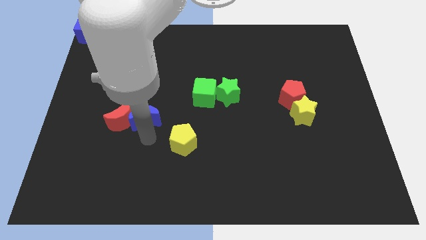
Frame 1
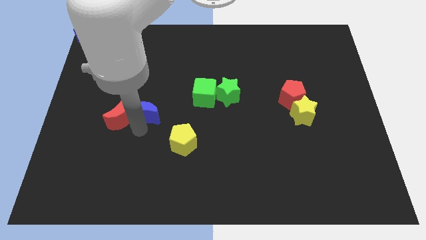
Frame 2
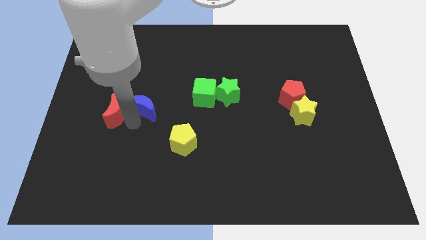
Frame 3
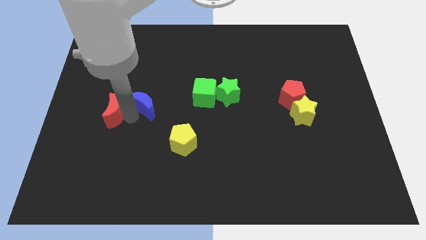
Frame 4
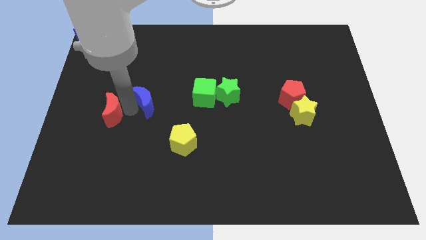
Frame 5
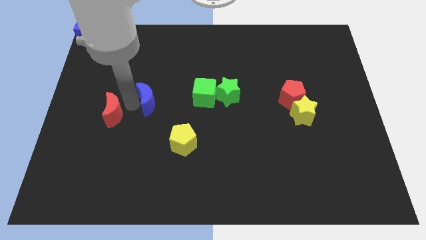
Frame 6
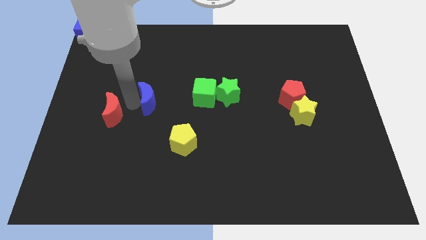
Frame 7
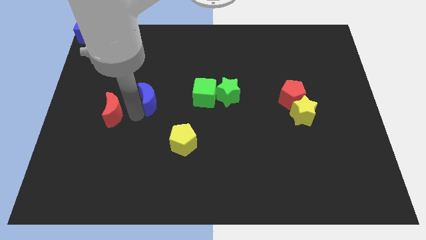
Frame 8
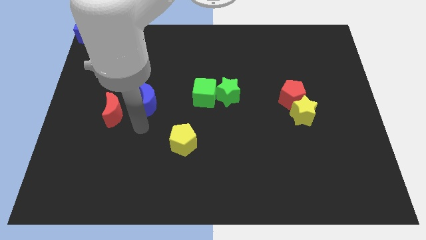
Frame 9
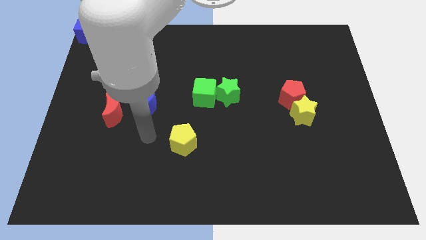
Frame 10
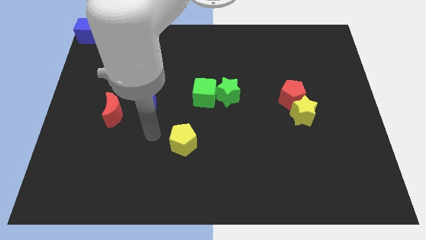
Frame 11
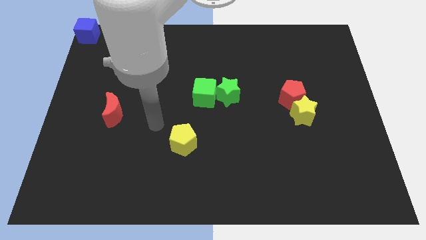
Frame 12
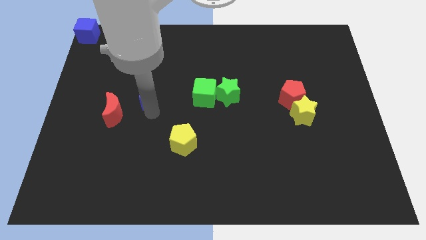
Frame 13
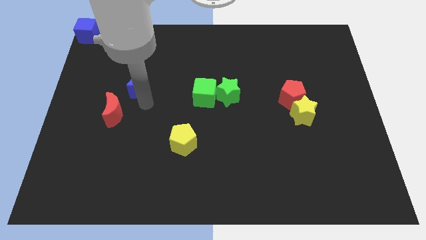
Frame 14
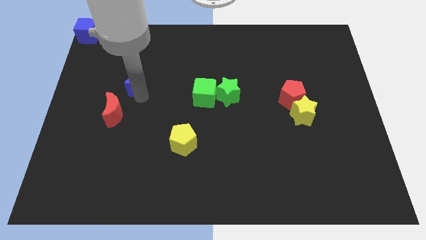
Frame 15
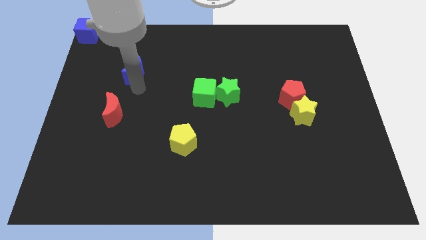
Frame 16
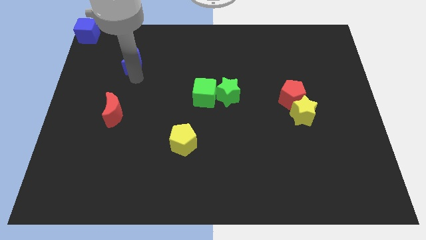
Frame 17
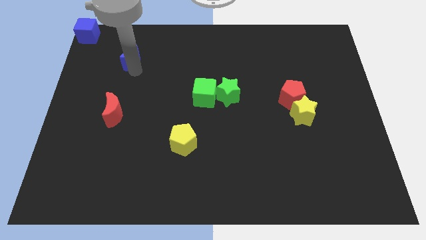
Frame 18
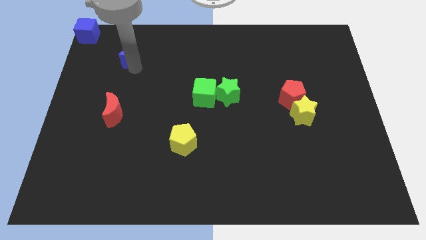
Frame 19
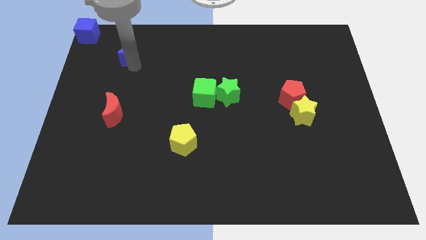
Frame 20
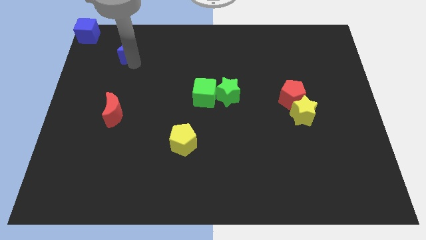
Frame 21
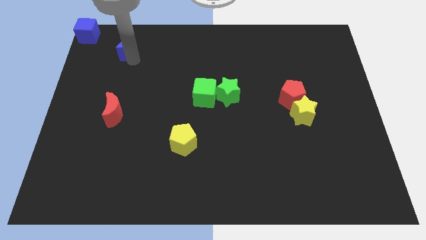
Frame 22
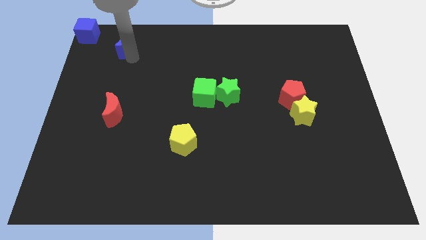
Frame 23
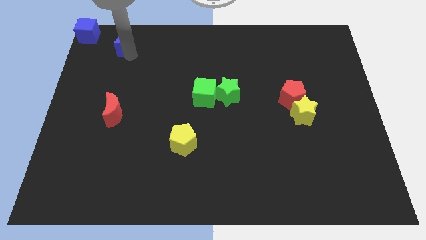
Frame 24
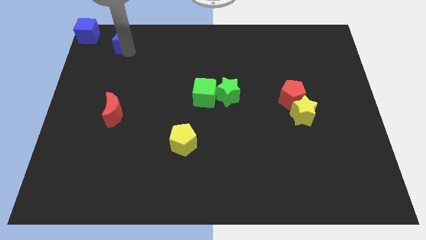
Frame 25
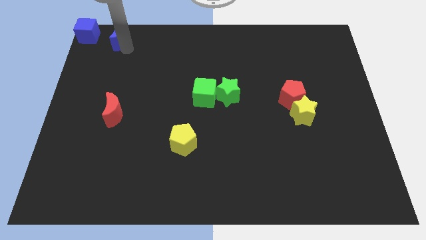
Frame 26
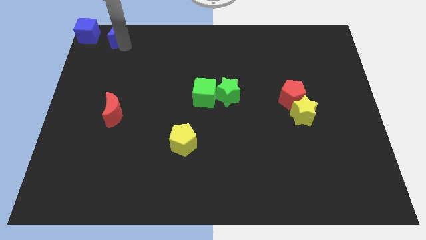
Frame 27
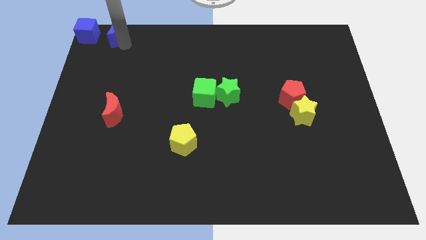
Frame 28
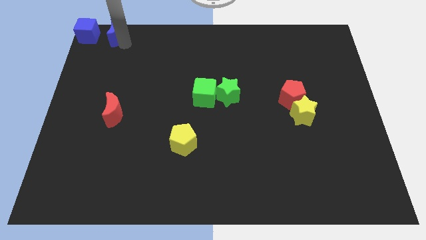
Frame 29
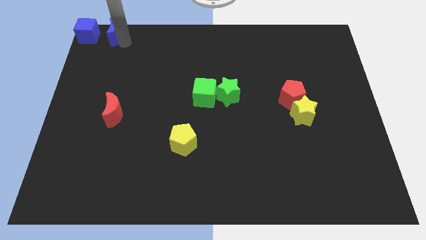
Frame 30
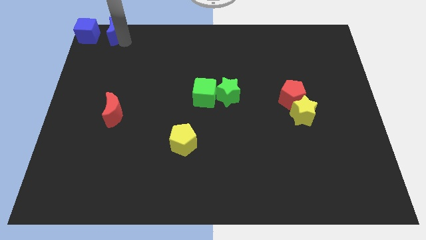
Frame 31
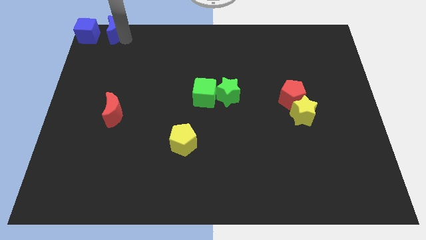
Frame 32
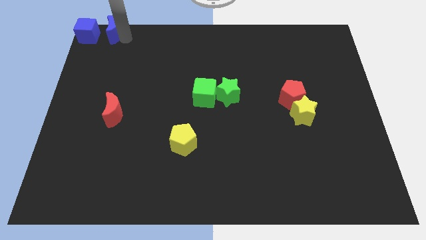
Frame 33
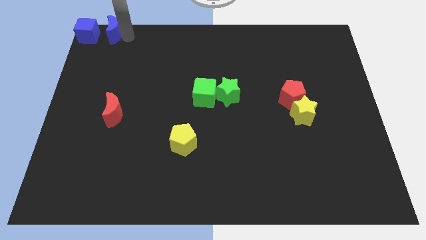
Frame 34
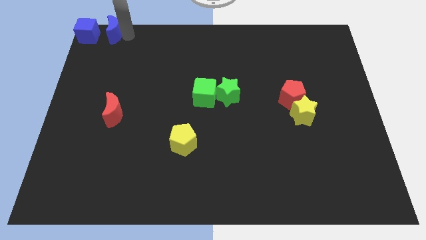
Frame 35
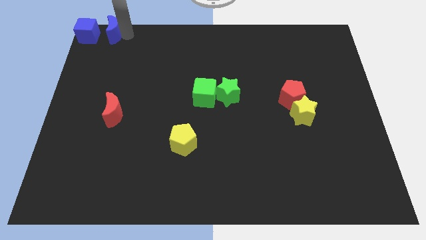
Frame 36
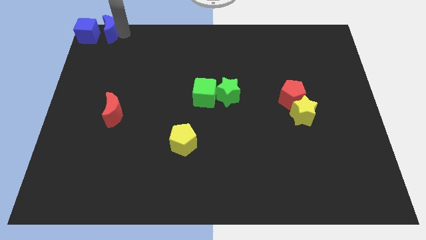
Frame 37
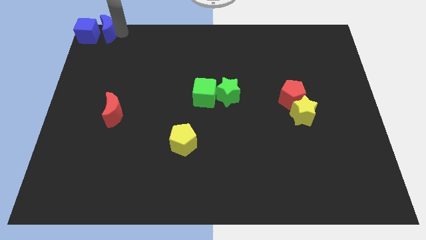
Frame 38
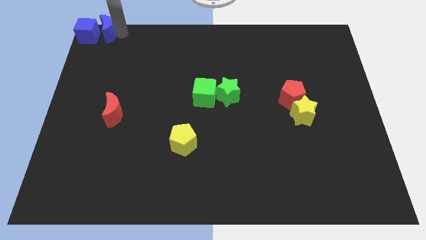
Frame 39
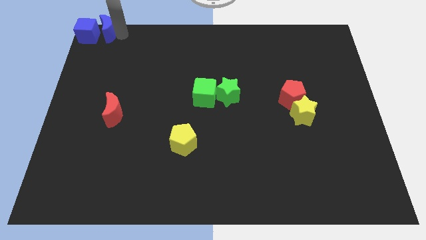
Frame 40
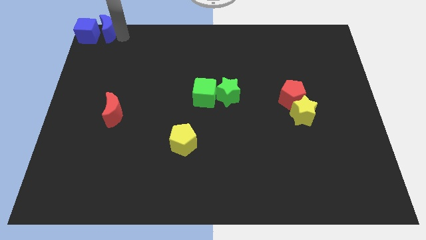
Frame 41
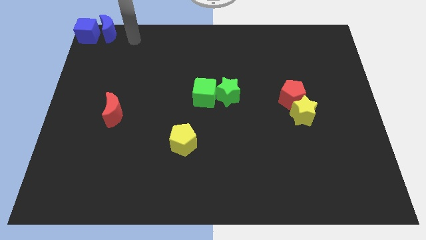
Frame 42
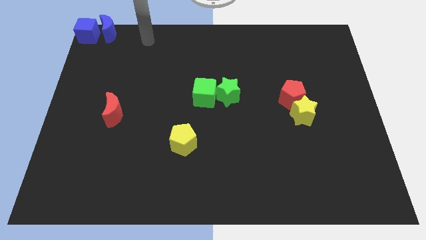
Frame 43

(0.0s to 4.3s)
push the blue moon to the right side of the blue cube

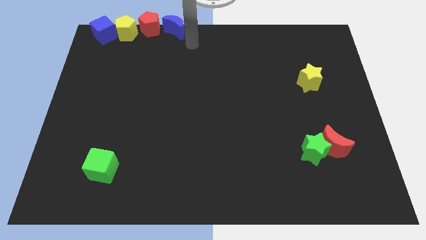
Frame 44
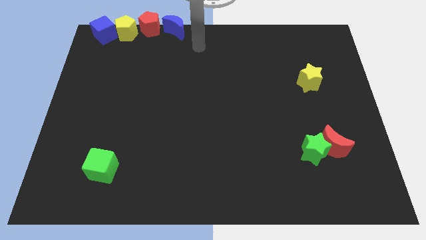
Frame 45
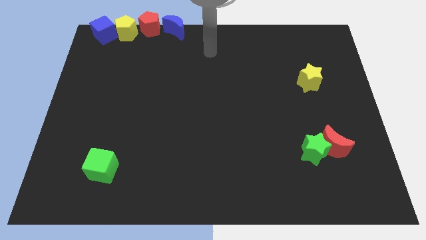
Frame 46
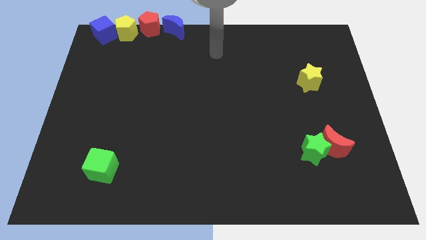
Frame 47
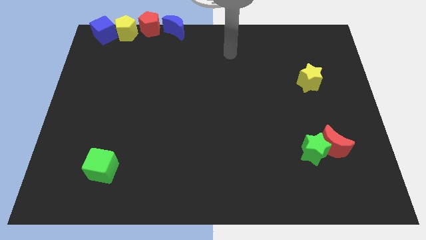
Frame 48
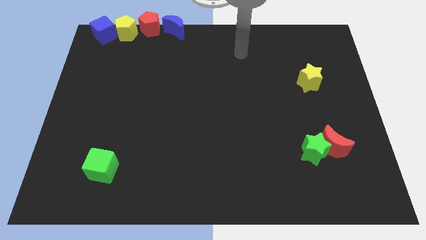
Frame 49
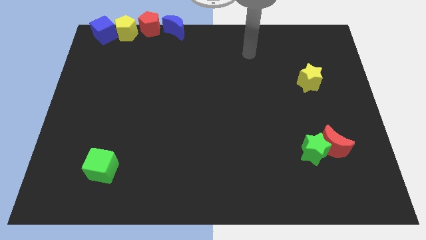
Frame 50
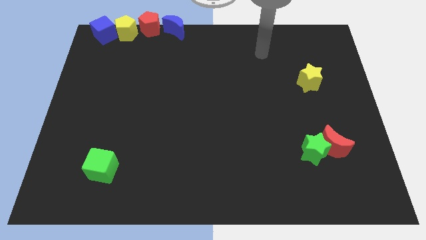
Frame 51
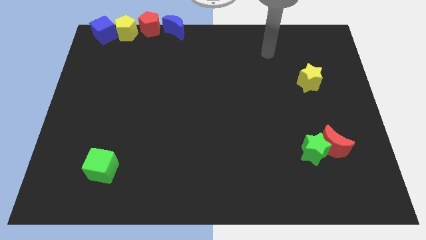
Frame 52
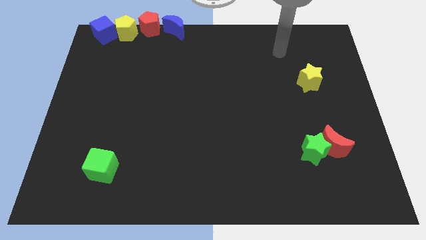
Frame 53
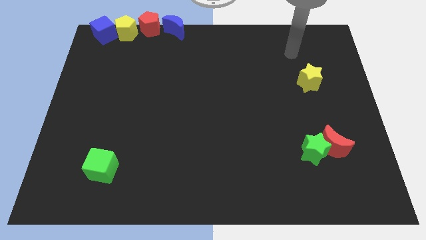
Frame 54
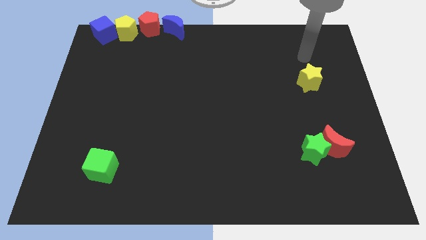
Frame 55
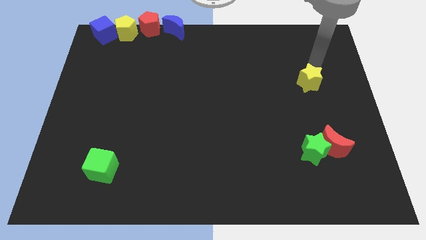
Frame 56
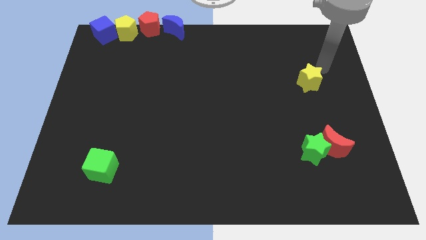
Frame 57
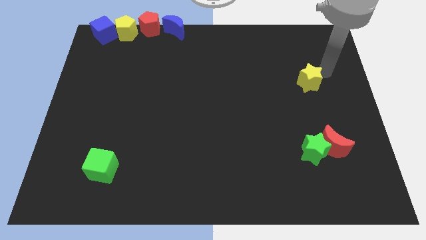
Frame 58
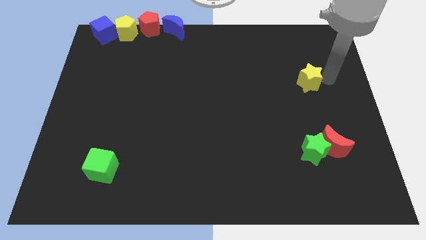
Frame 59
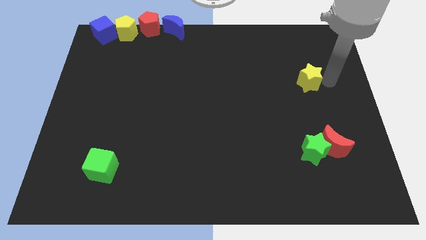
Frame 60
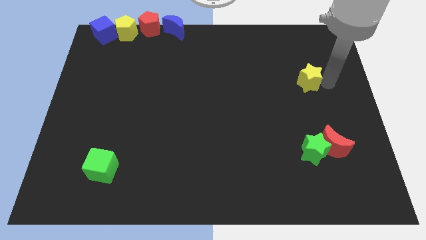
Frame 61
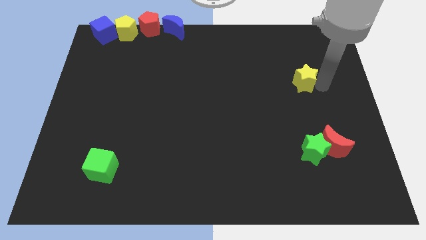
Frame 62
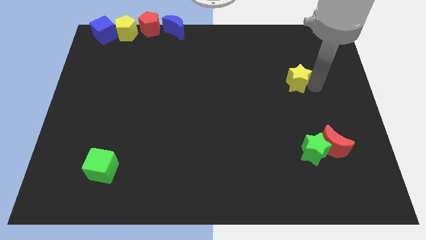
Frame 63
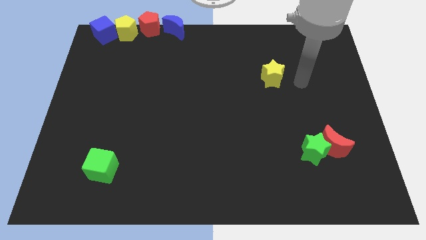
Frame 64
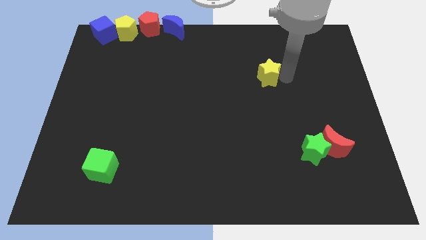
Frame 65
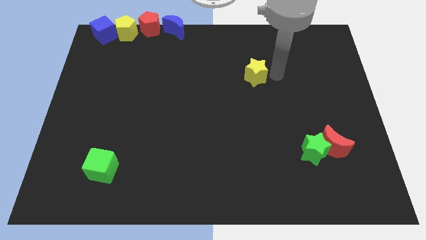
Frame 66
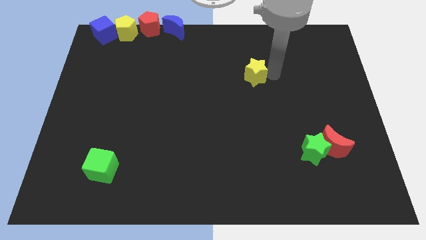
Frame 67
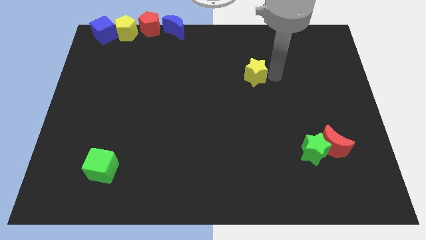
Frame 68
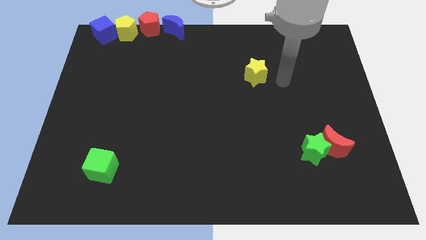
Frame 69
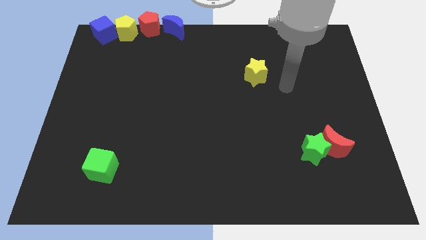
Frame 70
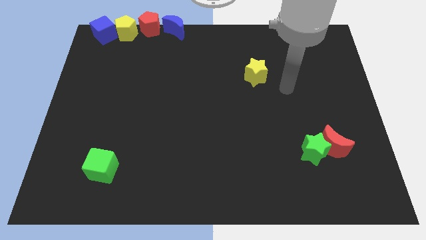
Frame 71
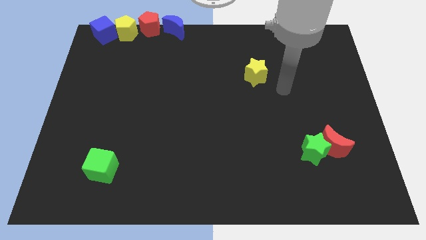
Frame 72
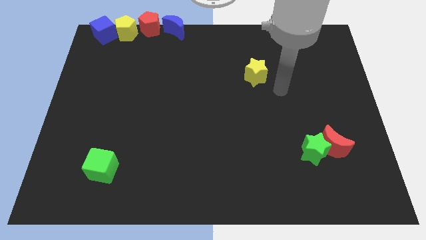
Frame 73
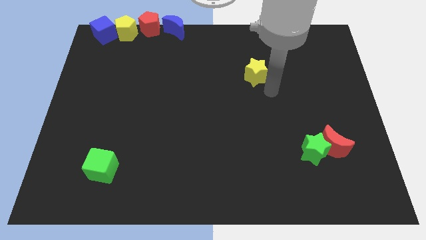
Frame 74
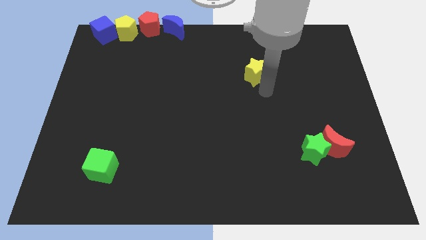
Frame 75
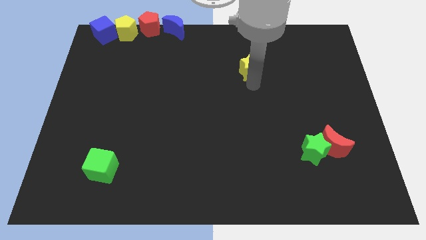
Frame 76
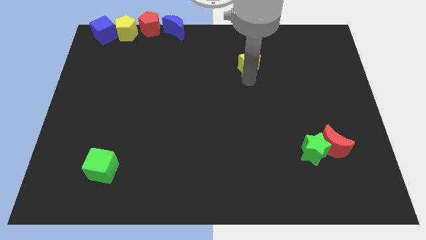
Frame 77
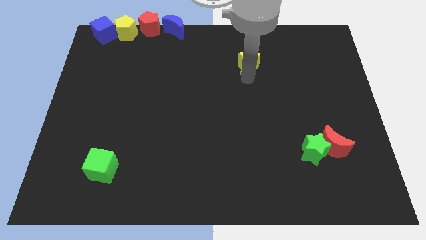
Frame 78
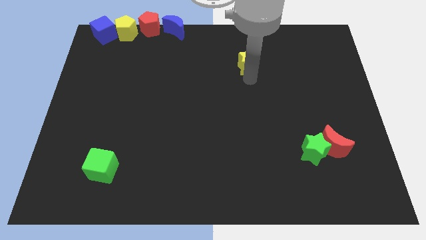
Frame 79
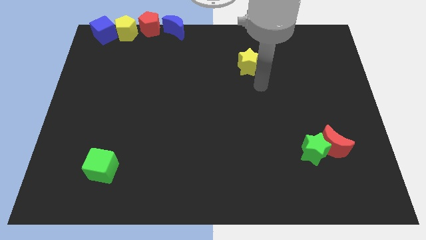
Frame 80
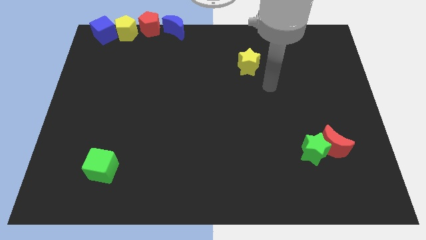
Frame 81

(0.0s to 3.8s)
push the yellow star to the bottom right of the blue crescent

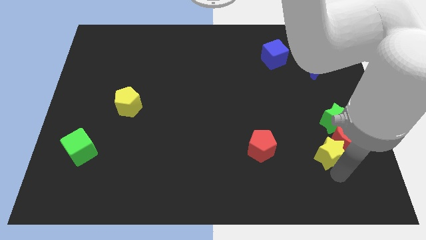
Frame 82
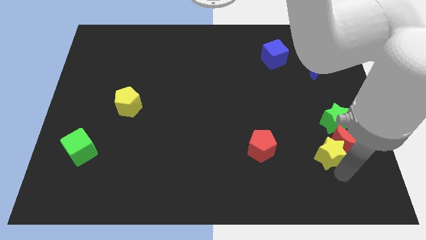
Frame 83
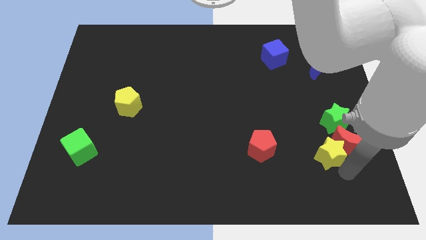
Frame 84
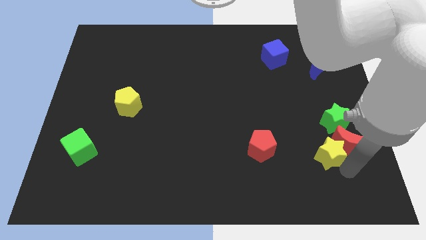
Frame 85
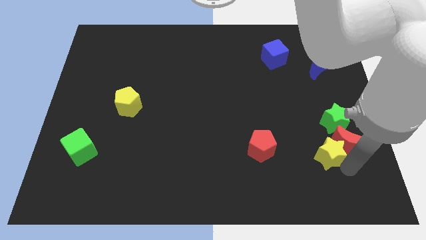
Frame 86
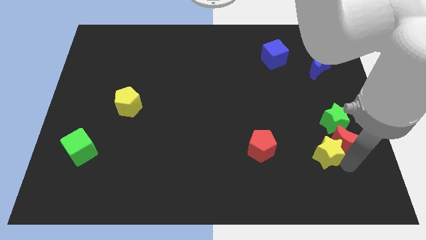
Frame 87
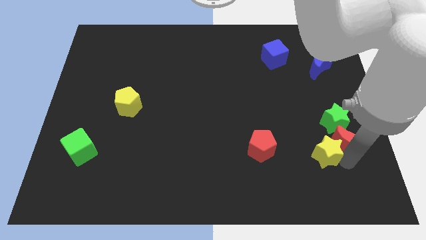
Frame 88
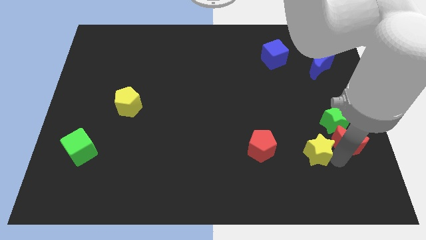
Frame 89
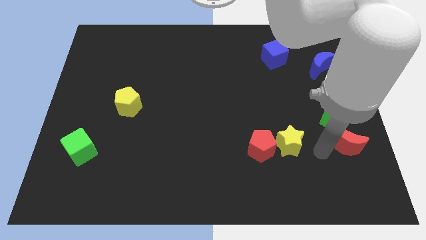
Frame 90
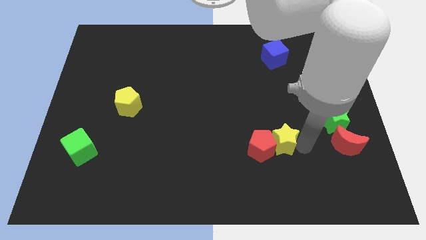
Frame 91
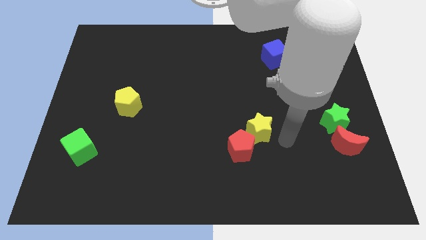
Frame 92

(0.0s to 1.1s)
push the yellow star into red pentagon
